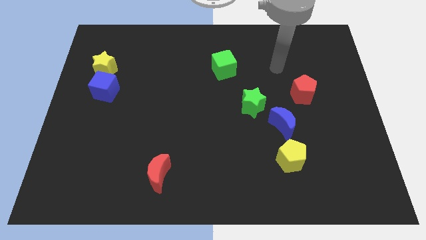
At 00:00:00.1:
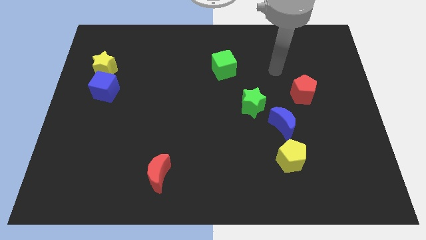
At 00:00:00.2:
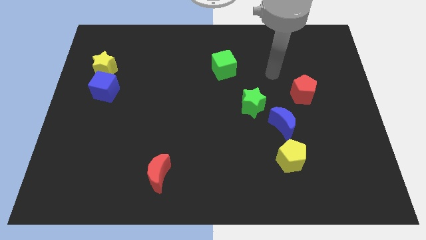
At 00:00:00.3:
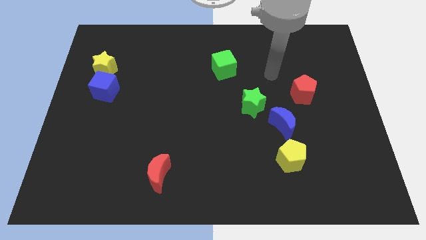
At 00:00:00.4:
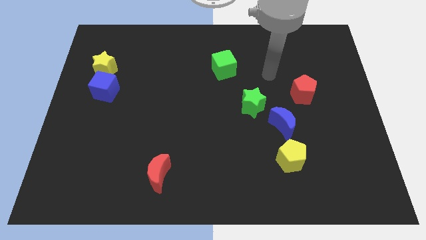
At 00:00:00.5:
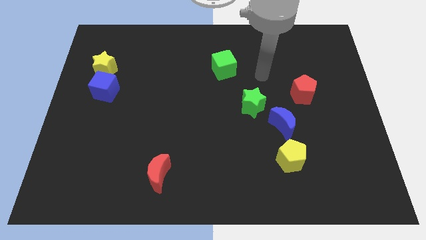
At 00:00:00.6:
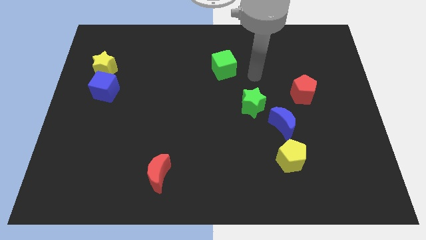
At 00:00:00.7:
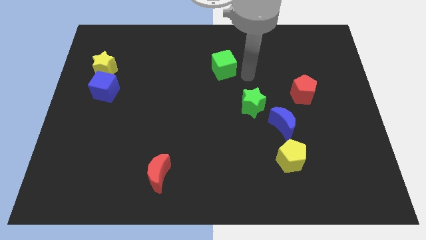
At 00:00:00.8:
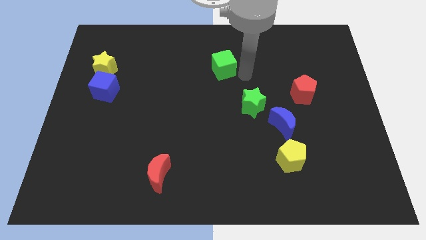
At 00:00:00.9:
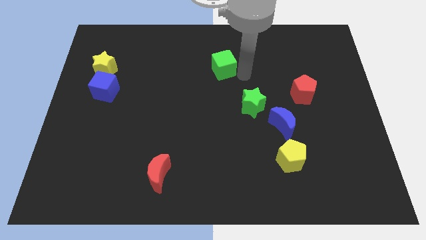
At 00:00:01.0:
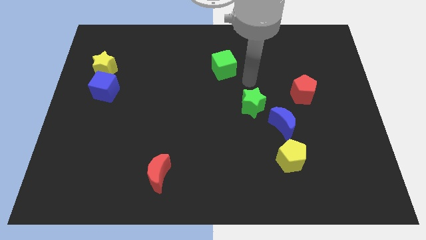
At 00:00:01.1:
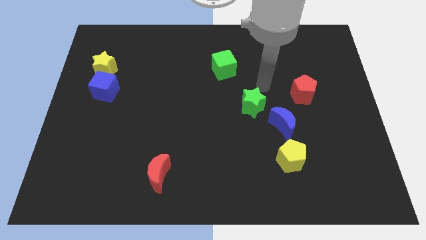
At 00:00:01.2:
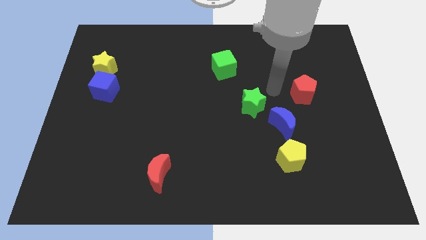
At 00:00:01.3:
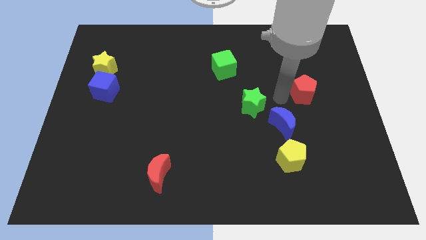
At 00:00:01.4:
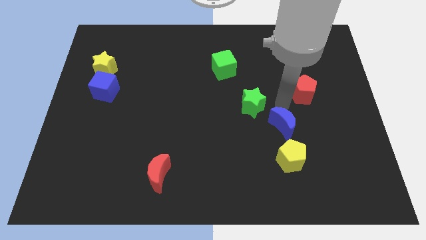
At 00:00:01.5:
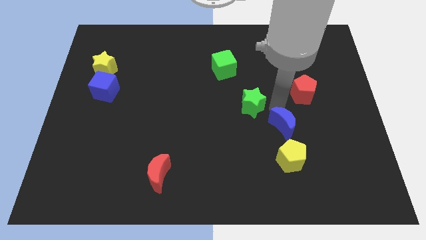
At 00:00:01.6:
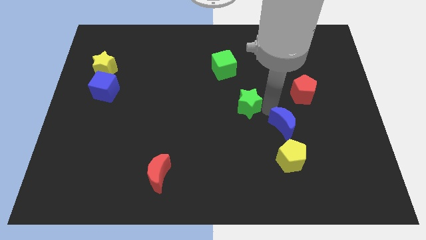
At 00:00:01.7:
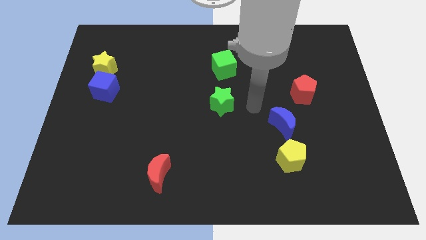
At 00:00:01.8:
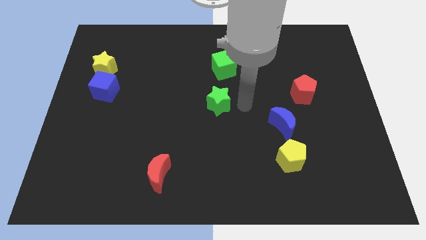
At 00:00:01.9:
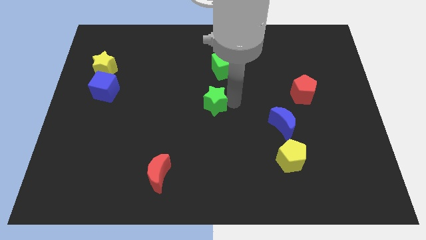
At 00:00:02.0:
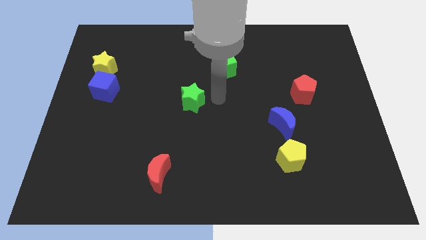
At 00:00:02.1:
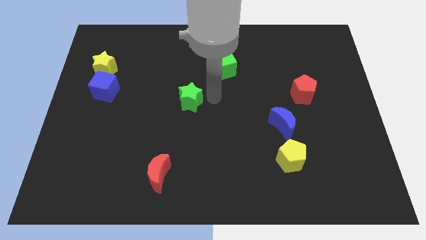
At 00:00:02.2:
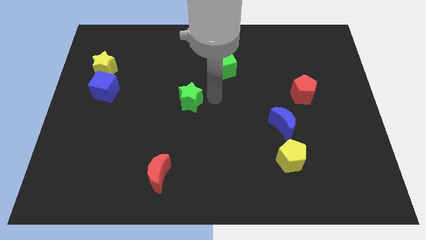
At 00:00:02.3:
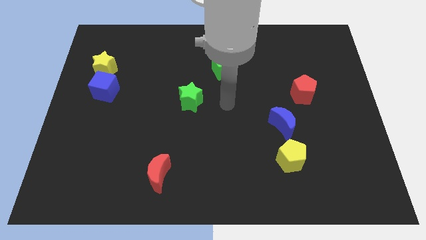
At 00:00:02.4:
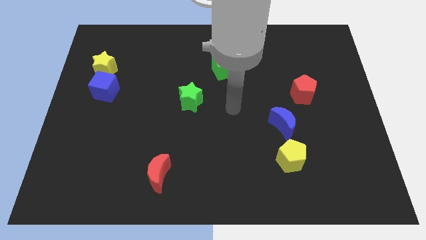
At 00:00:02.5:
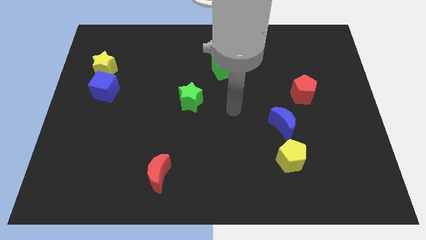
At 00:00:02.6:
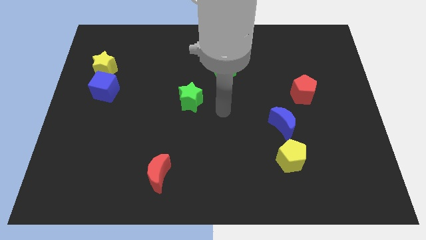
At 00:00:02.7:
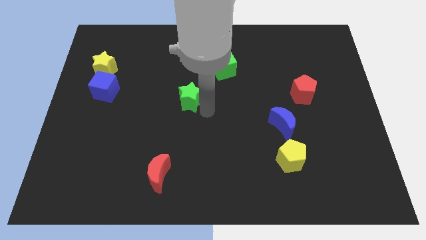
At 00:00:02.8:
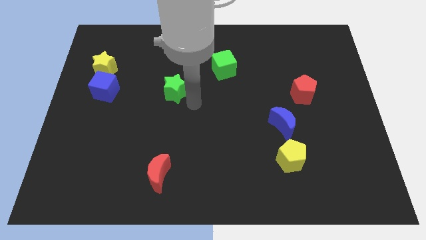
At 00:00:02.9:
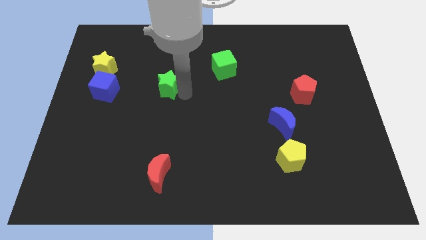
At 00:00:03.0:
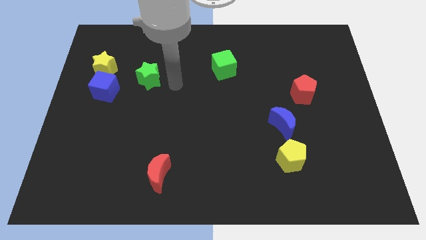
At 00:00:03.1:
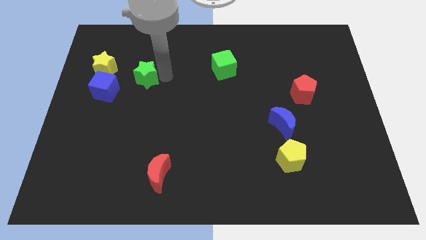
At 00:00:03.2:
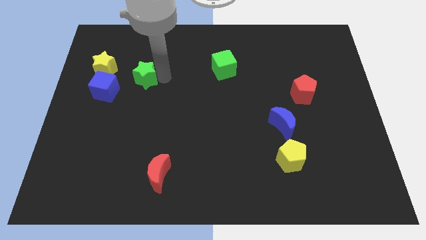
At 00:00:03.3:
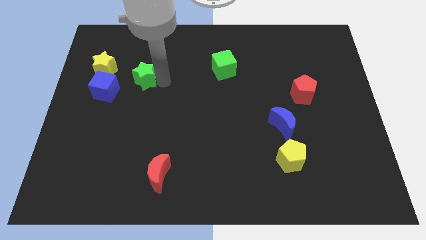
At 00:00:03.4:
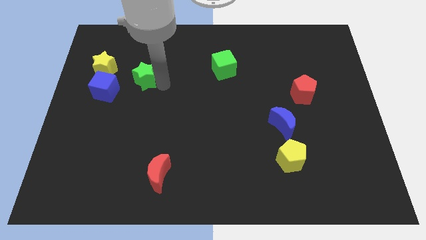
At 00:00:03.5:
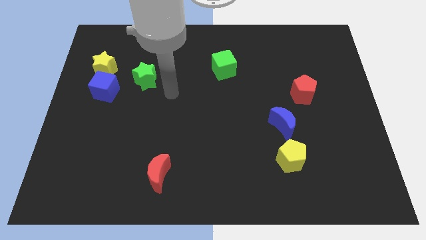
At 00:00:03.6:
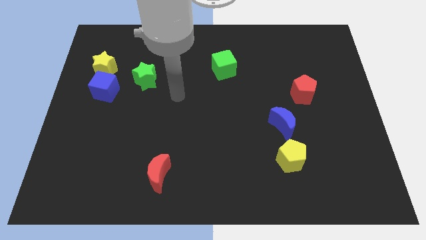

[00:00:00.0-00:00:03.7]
move the green star towards the yellow star

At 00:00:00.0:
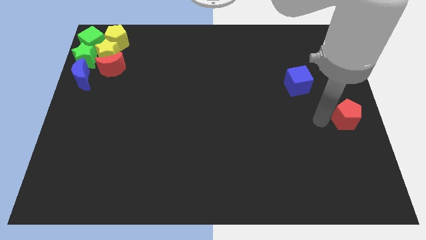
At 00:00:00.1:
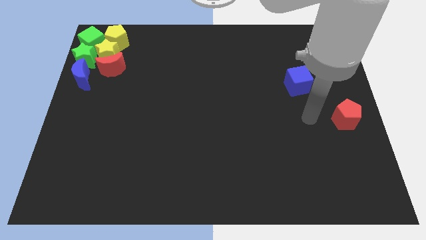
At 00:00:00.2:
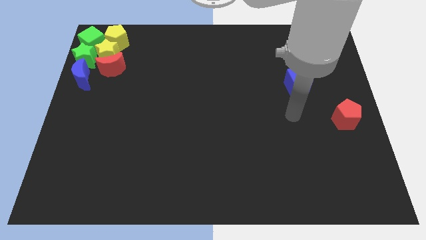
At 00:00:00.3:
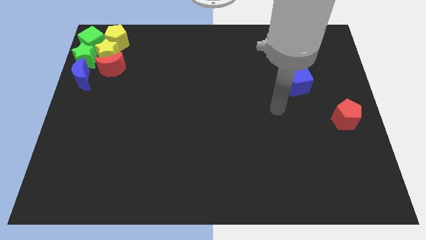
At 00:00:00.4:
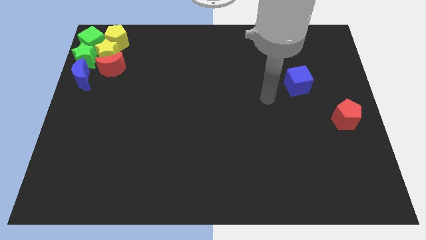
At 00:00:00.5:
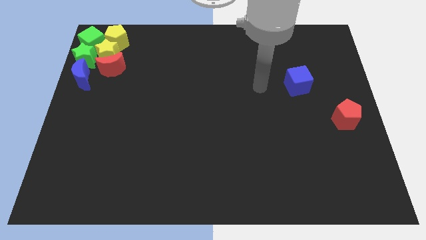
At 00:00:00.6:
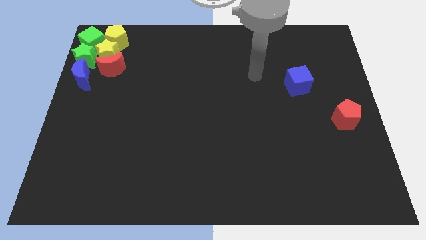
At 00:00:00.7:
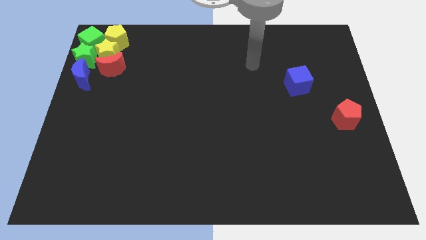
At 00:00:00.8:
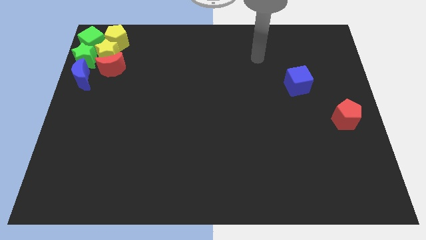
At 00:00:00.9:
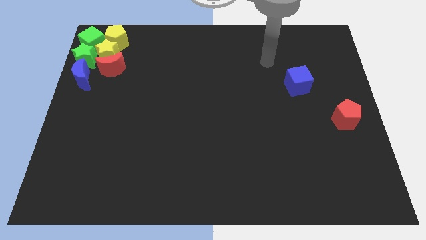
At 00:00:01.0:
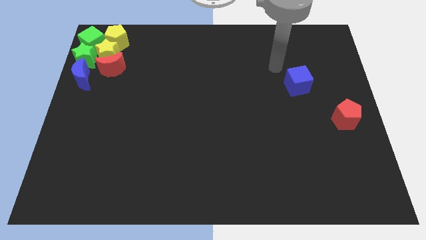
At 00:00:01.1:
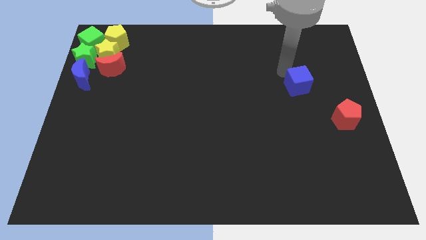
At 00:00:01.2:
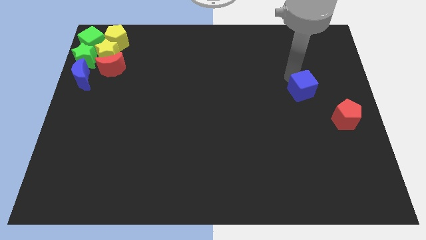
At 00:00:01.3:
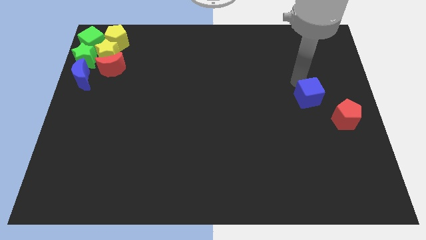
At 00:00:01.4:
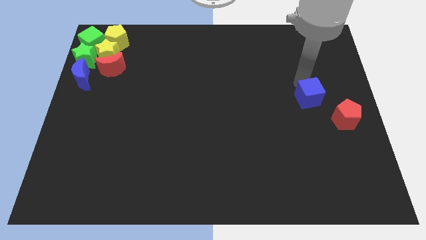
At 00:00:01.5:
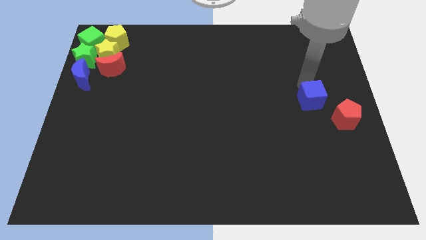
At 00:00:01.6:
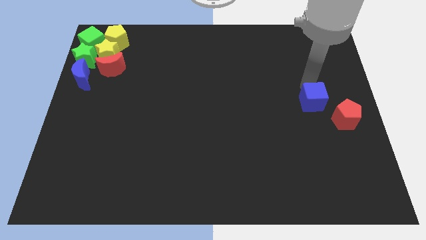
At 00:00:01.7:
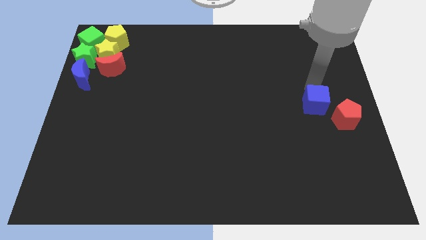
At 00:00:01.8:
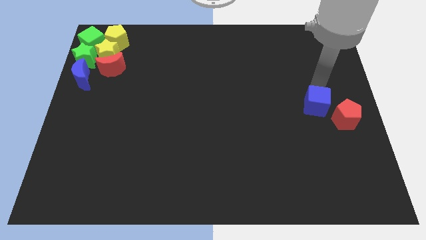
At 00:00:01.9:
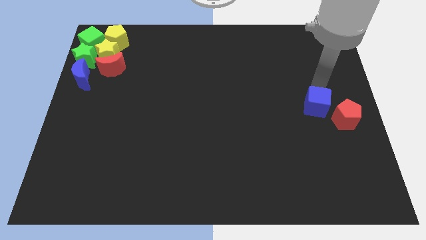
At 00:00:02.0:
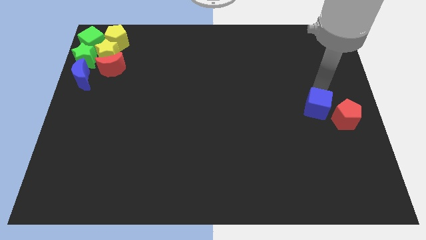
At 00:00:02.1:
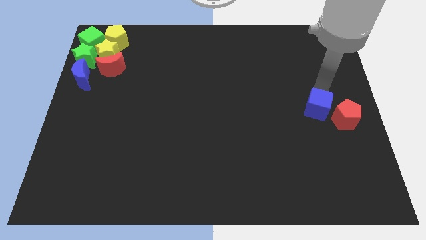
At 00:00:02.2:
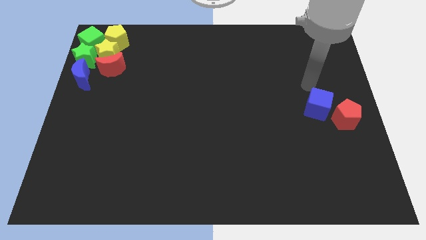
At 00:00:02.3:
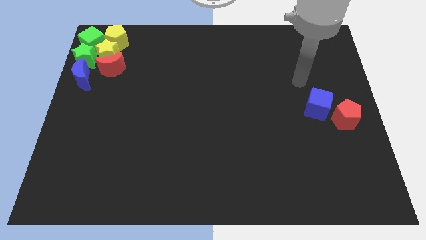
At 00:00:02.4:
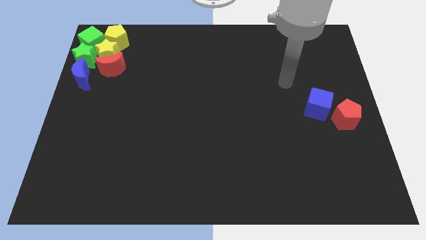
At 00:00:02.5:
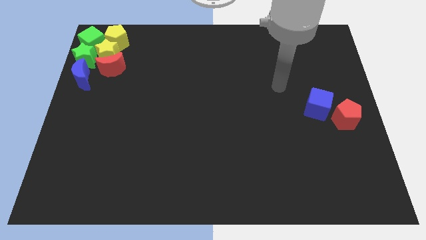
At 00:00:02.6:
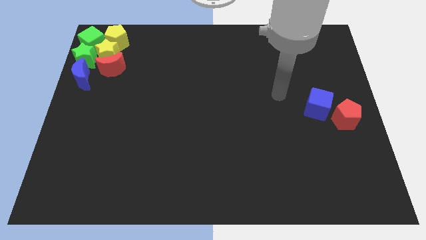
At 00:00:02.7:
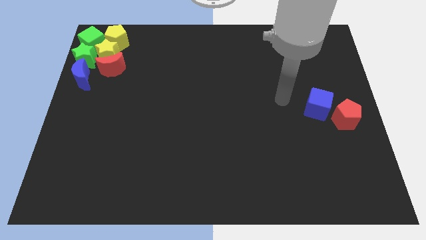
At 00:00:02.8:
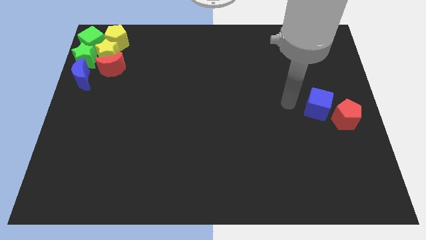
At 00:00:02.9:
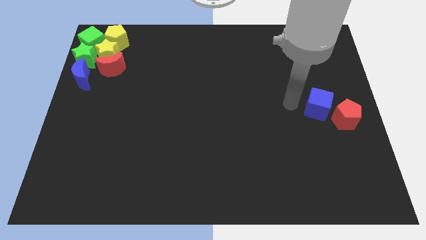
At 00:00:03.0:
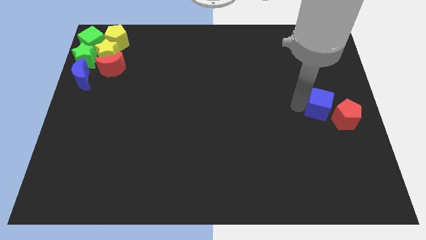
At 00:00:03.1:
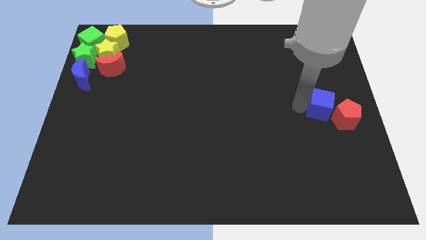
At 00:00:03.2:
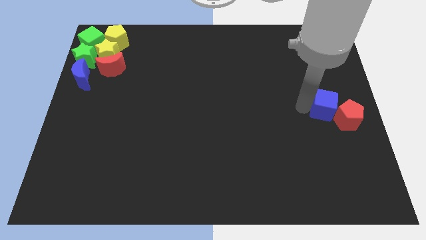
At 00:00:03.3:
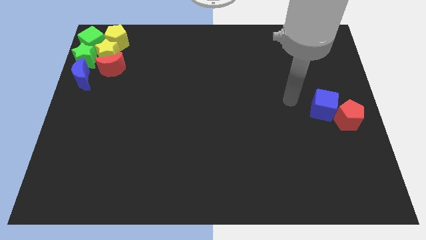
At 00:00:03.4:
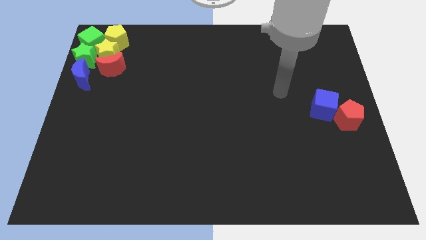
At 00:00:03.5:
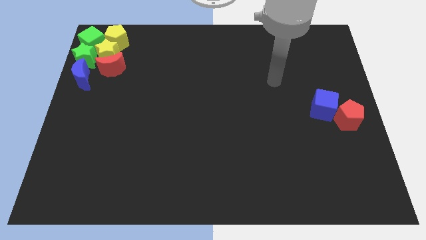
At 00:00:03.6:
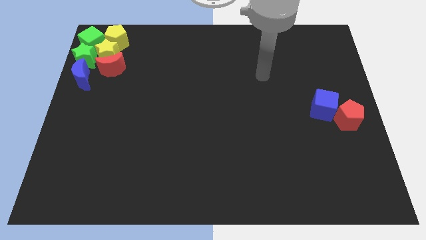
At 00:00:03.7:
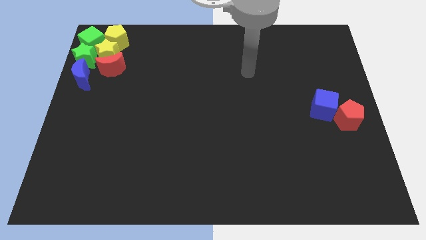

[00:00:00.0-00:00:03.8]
push the blue cube into the red pentagon

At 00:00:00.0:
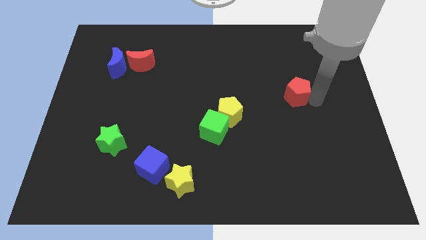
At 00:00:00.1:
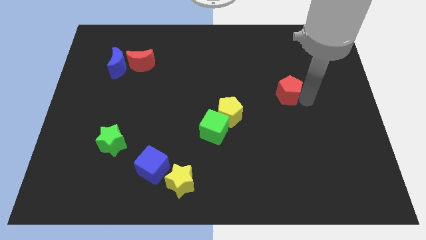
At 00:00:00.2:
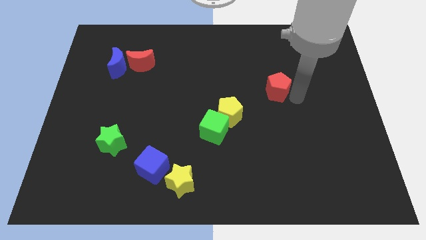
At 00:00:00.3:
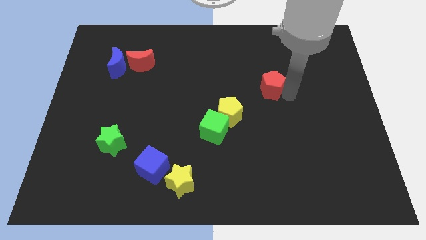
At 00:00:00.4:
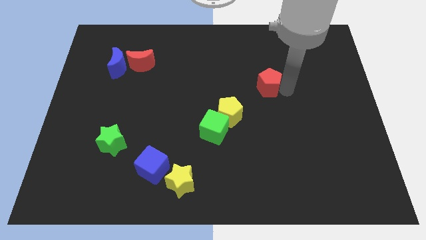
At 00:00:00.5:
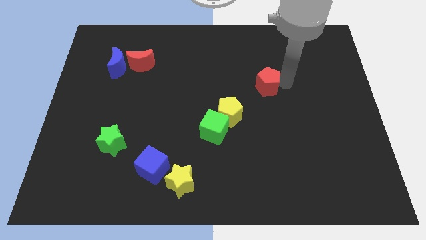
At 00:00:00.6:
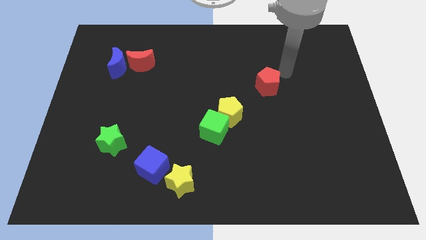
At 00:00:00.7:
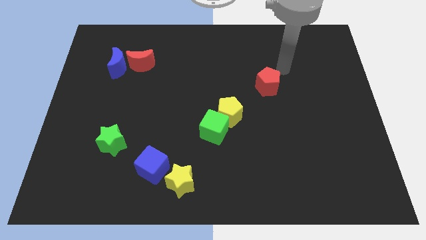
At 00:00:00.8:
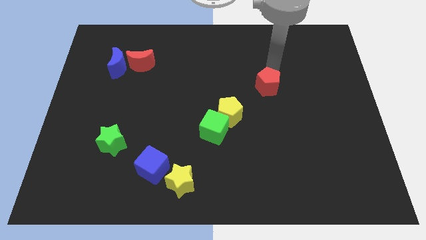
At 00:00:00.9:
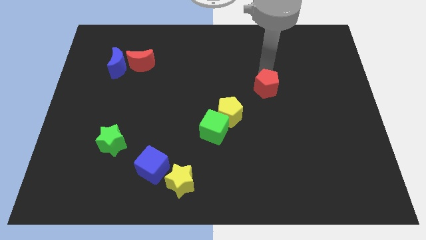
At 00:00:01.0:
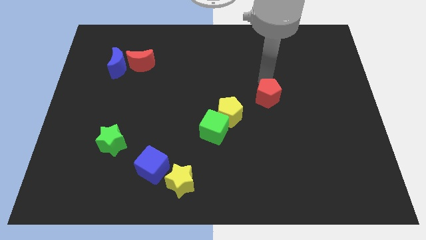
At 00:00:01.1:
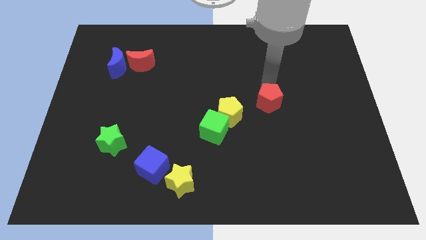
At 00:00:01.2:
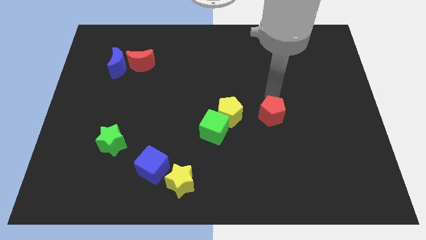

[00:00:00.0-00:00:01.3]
move the red pentagon to the right side of the yellow pentagon
